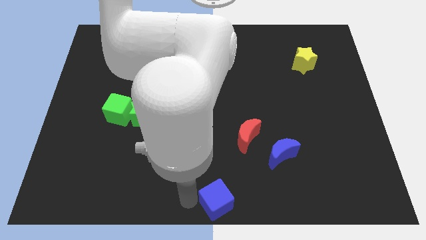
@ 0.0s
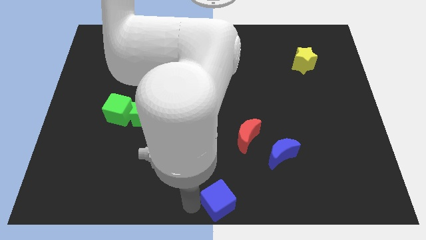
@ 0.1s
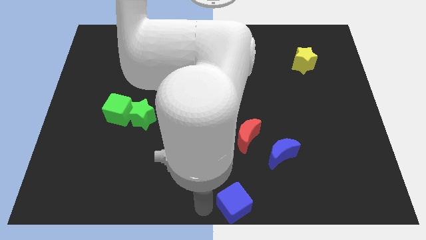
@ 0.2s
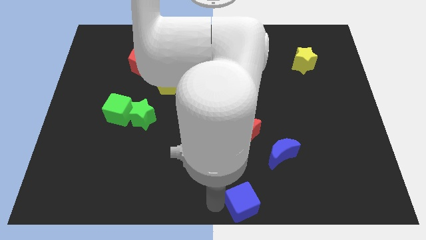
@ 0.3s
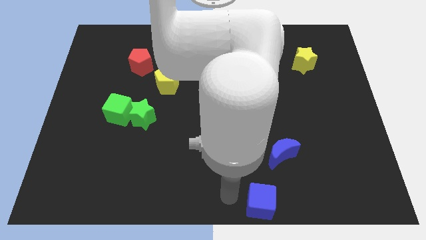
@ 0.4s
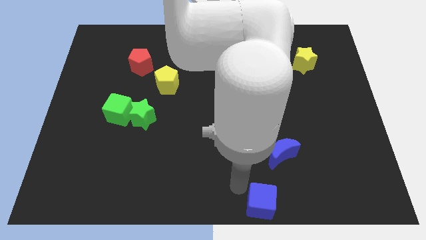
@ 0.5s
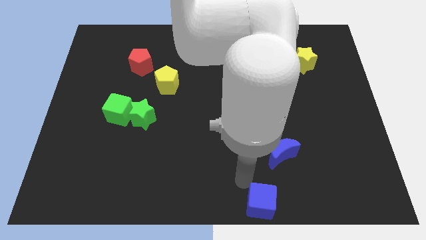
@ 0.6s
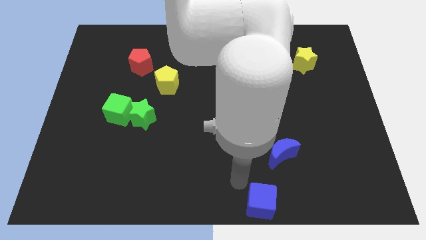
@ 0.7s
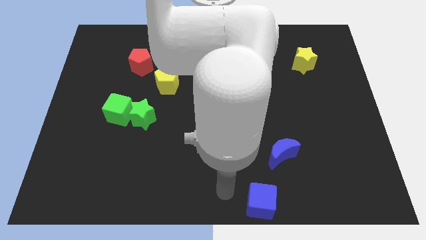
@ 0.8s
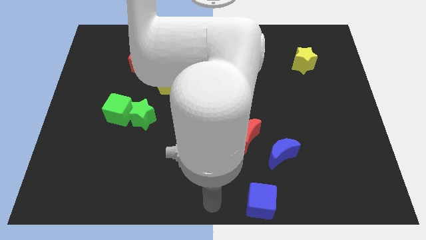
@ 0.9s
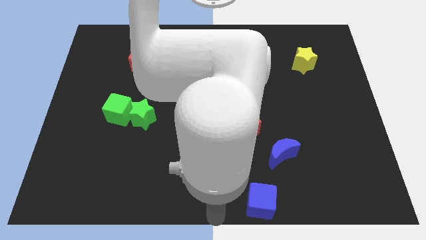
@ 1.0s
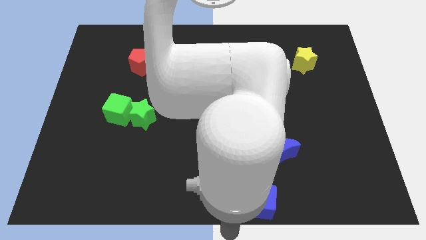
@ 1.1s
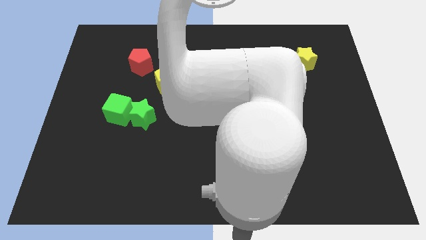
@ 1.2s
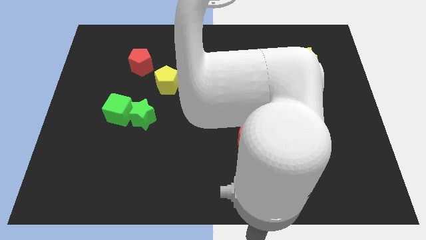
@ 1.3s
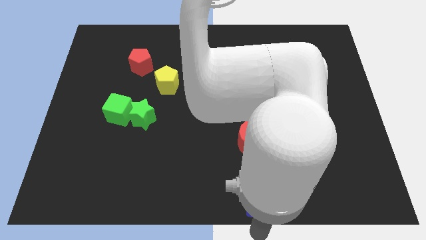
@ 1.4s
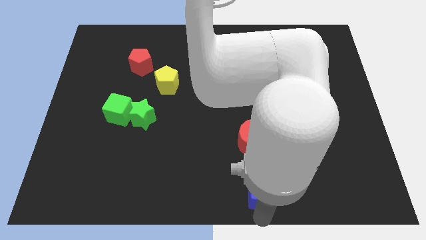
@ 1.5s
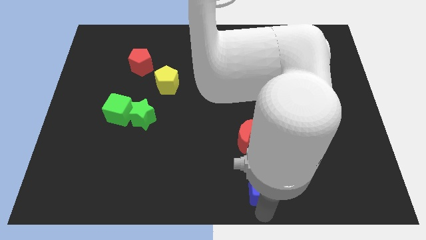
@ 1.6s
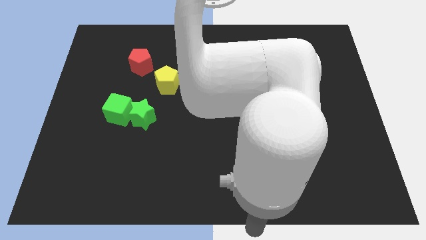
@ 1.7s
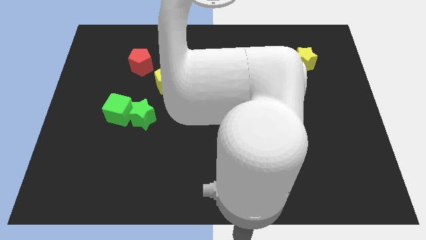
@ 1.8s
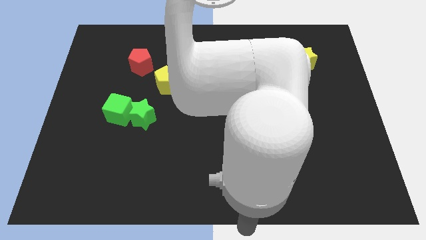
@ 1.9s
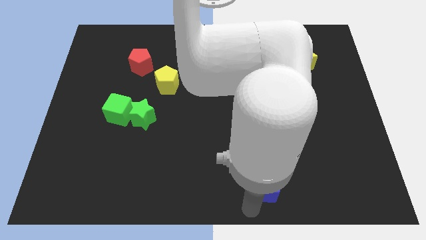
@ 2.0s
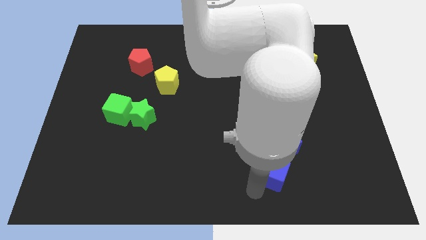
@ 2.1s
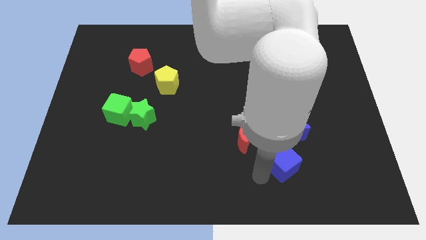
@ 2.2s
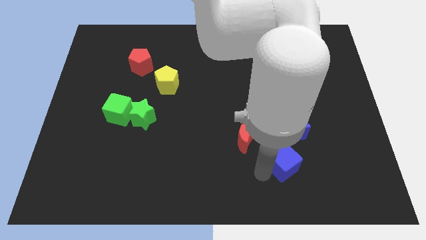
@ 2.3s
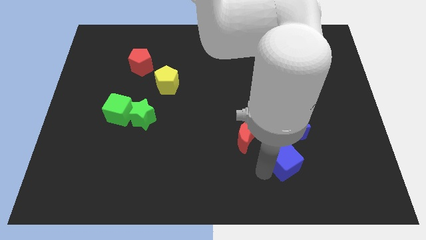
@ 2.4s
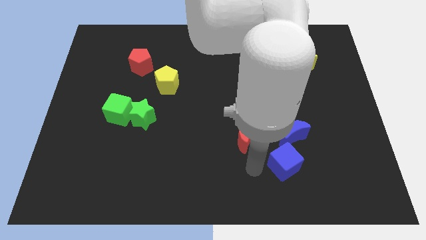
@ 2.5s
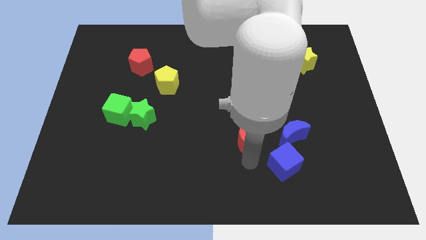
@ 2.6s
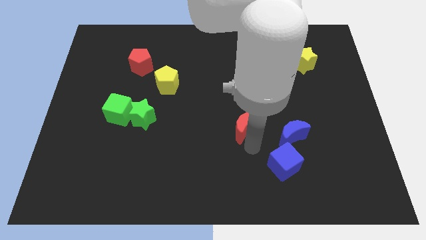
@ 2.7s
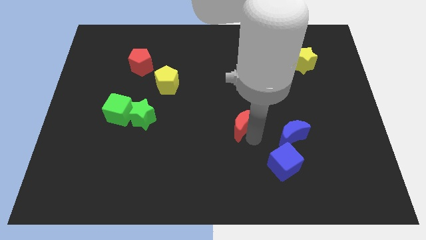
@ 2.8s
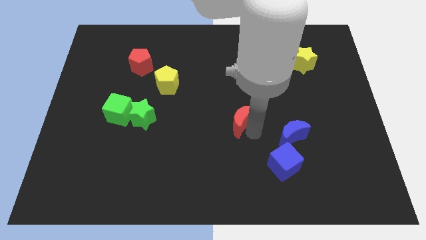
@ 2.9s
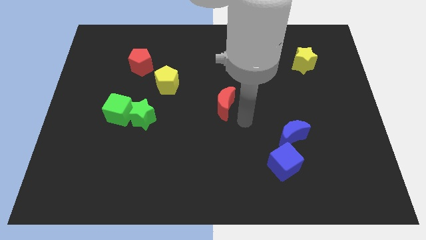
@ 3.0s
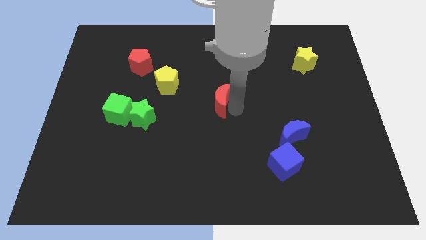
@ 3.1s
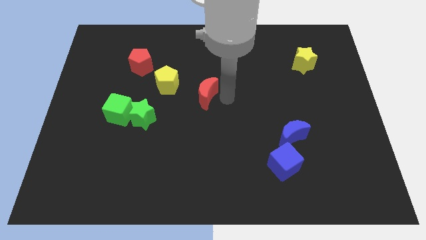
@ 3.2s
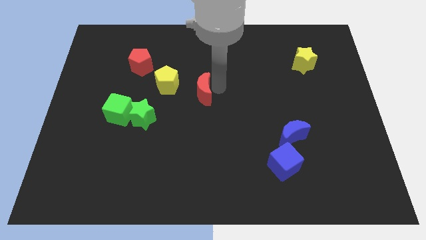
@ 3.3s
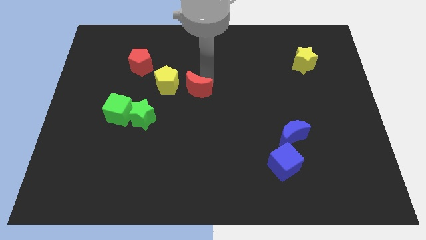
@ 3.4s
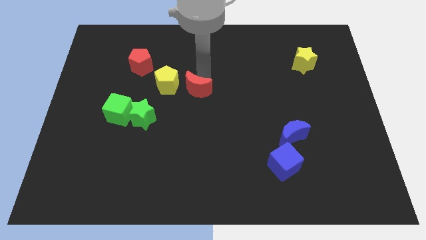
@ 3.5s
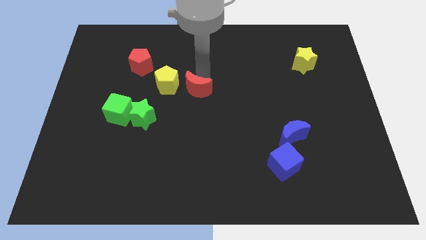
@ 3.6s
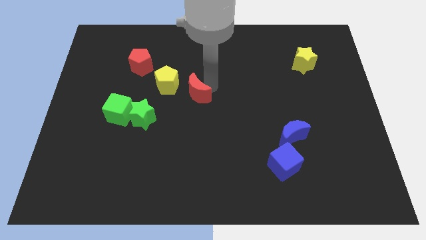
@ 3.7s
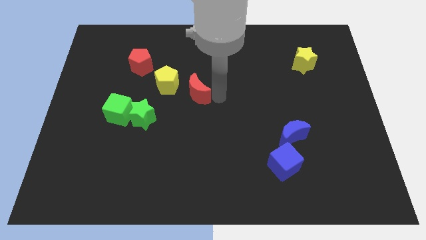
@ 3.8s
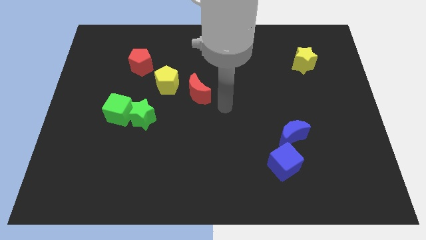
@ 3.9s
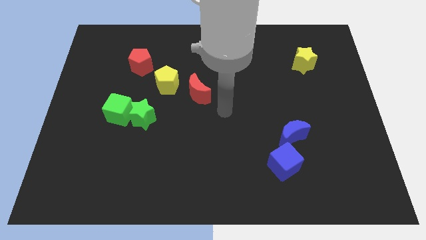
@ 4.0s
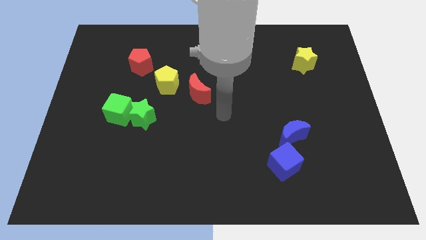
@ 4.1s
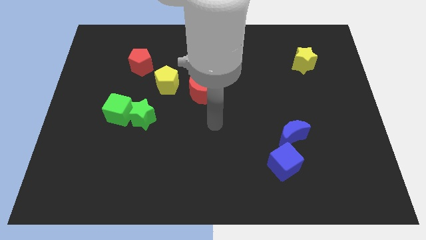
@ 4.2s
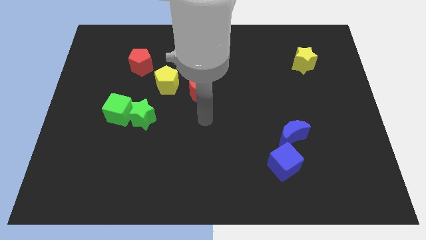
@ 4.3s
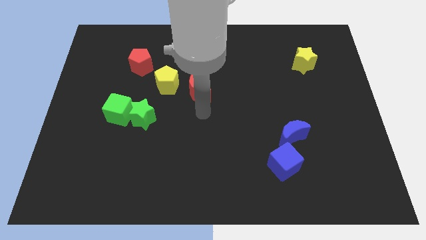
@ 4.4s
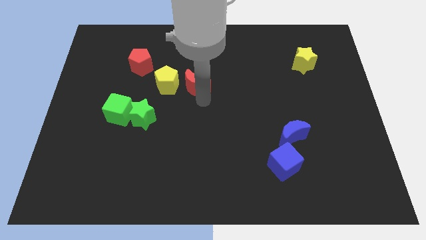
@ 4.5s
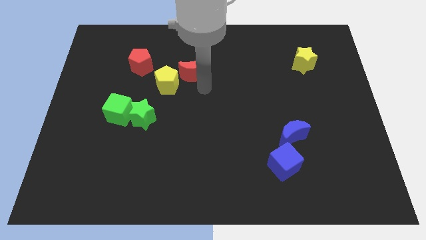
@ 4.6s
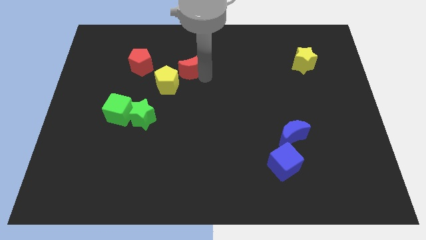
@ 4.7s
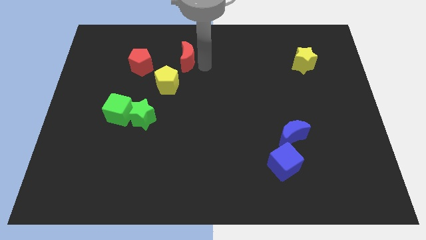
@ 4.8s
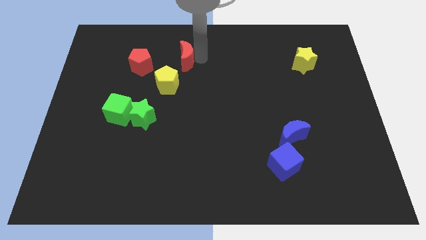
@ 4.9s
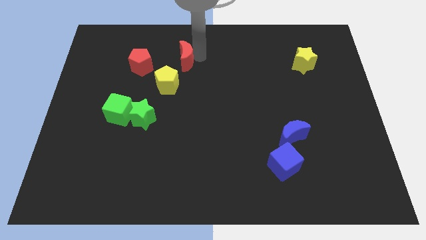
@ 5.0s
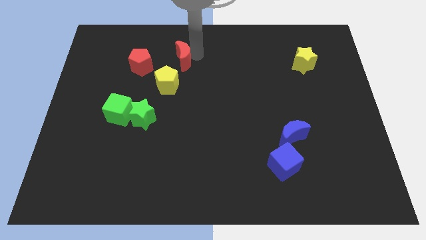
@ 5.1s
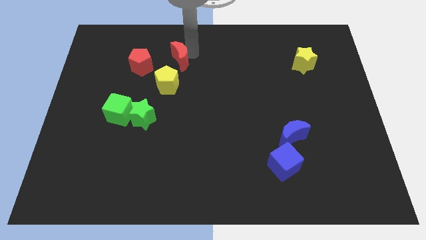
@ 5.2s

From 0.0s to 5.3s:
place the red crescent above the yellow pentagon

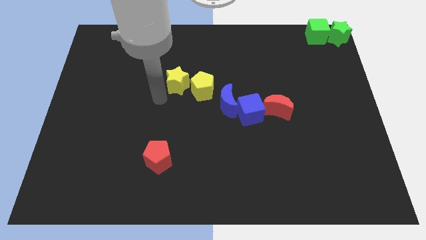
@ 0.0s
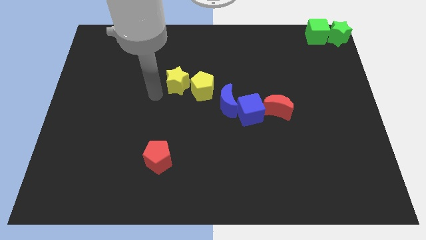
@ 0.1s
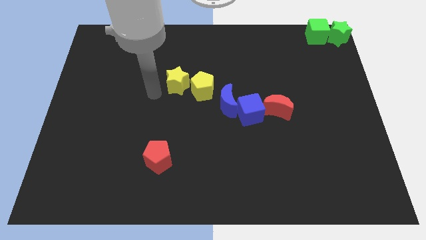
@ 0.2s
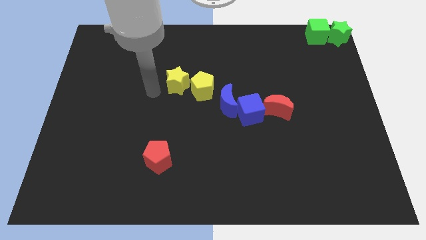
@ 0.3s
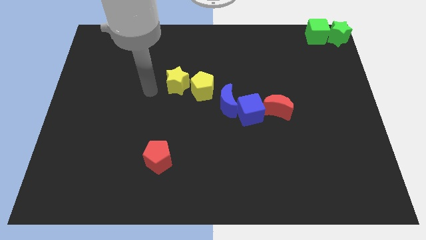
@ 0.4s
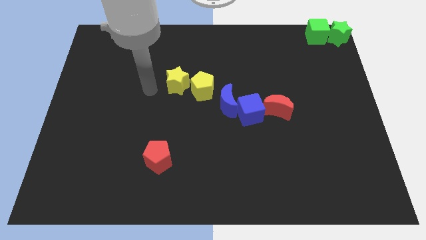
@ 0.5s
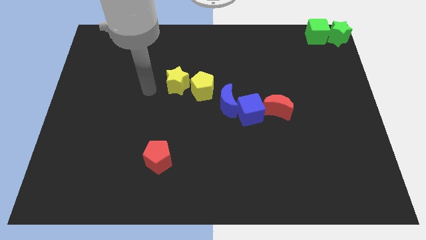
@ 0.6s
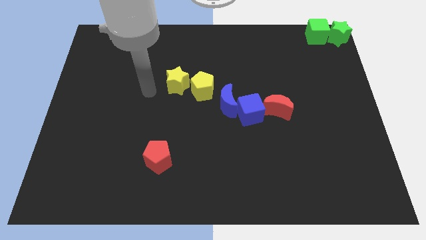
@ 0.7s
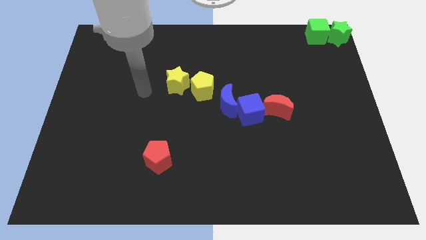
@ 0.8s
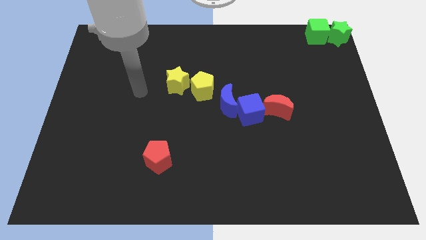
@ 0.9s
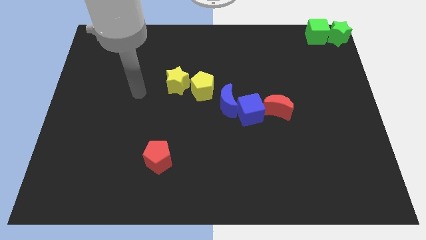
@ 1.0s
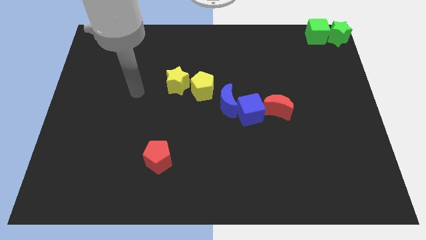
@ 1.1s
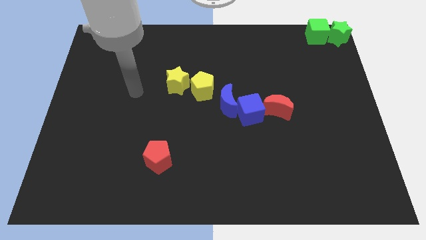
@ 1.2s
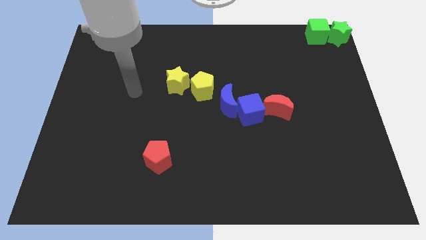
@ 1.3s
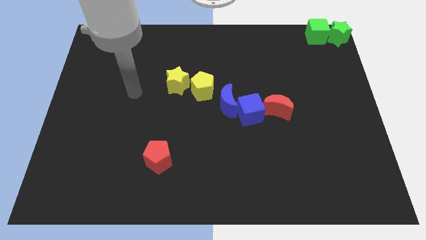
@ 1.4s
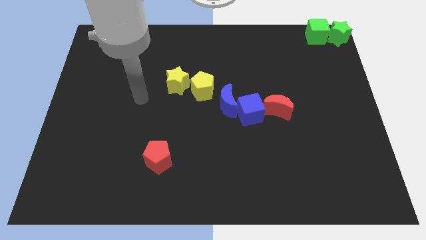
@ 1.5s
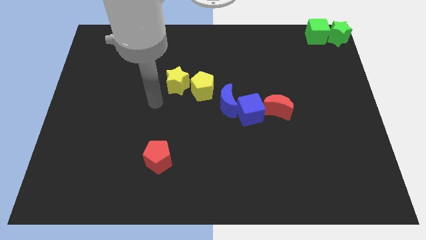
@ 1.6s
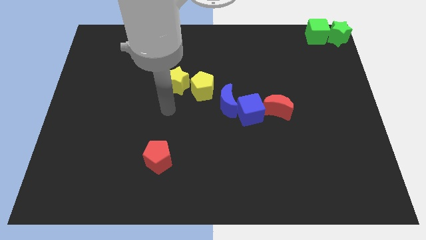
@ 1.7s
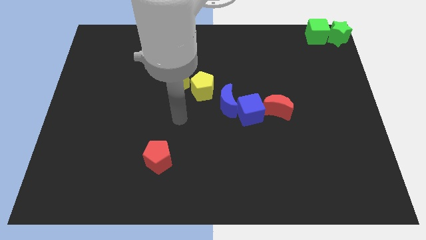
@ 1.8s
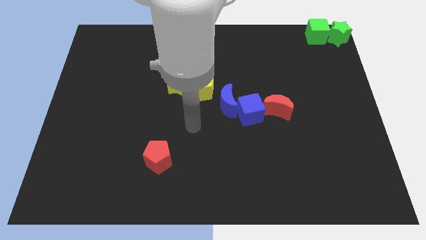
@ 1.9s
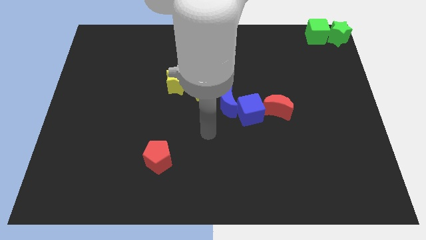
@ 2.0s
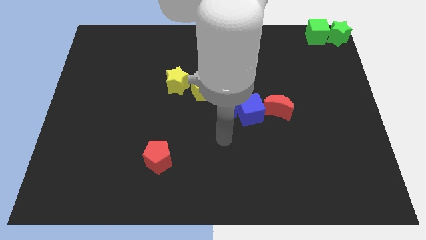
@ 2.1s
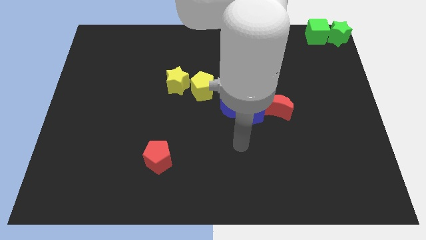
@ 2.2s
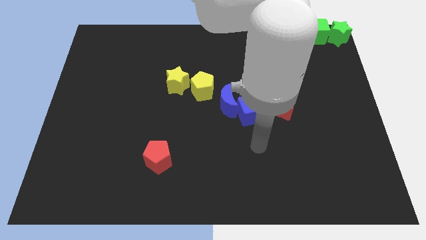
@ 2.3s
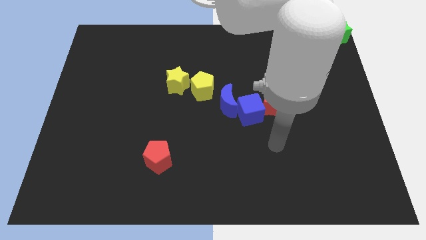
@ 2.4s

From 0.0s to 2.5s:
move your arm away from the yellow star

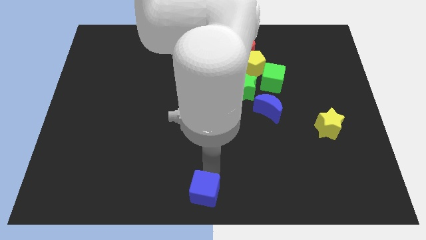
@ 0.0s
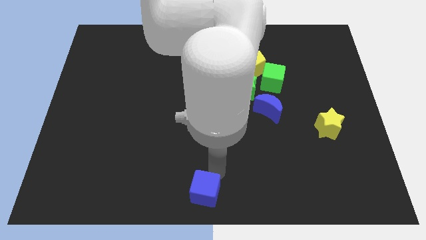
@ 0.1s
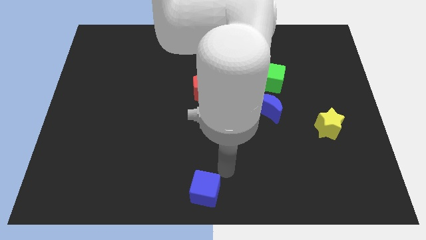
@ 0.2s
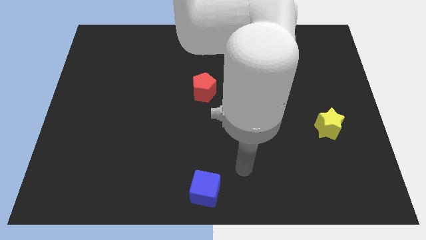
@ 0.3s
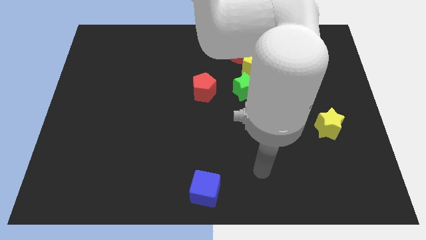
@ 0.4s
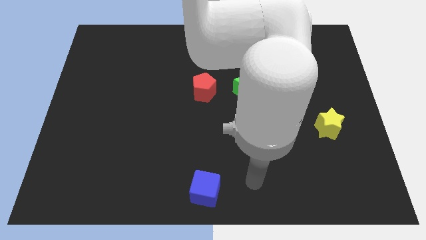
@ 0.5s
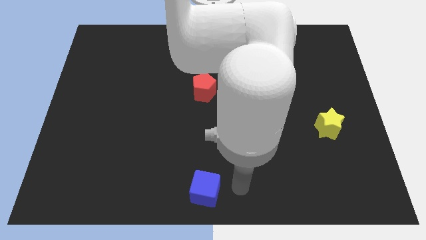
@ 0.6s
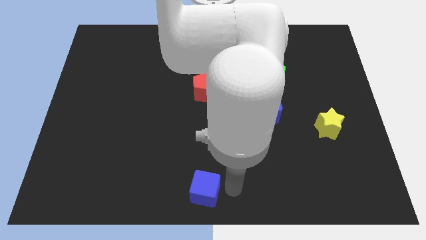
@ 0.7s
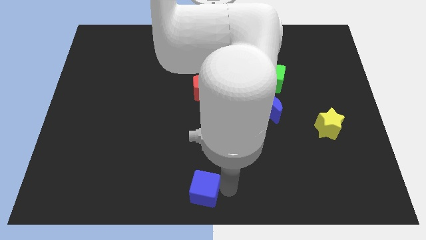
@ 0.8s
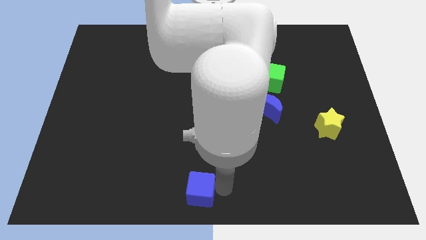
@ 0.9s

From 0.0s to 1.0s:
place blue cube vertically below red pentagon

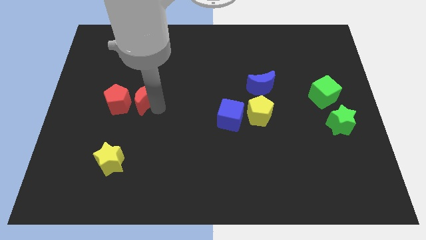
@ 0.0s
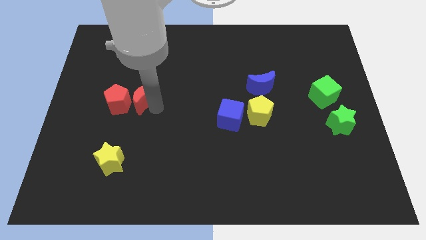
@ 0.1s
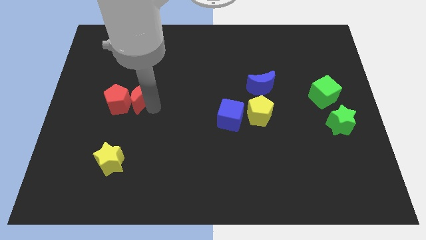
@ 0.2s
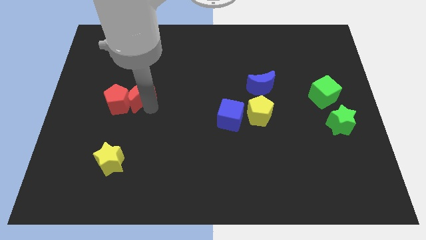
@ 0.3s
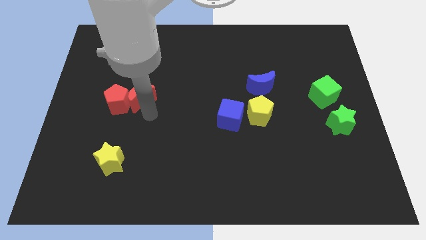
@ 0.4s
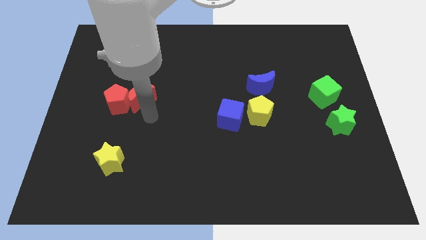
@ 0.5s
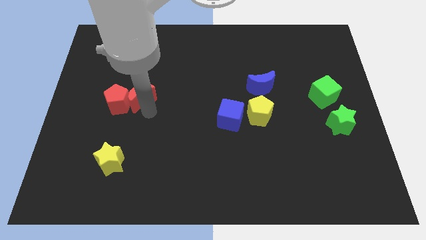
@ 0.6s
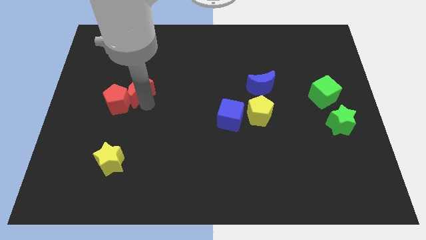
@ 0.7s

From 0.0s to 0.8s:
slightly push the red crescent into the red pentagon
